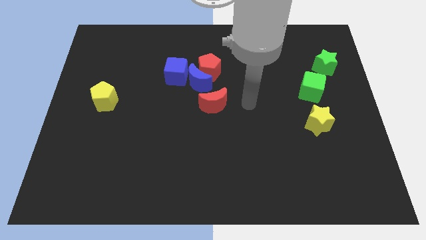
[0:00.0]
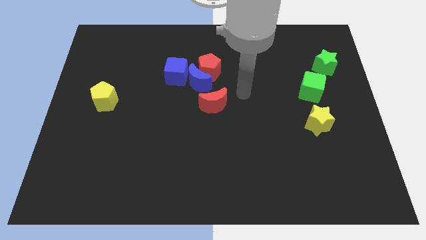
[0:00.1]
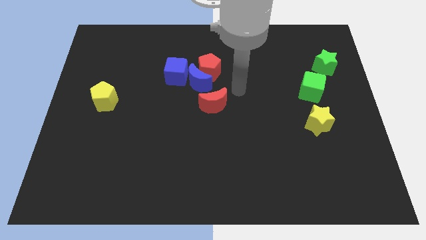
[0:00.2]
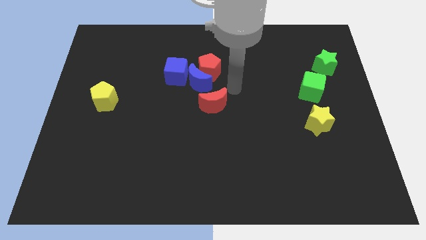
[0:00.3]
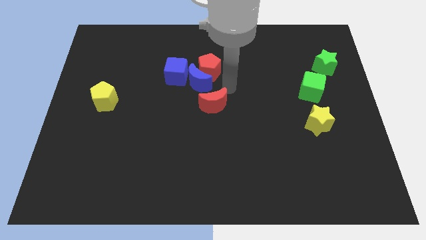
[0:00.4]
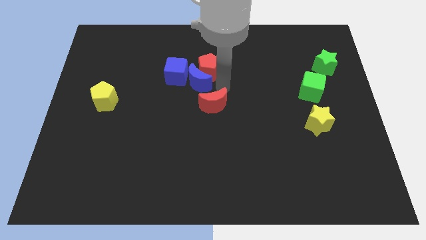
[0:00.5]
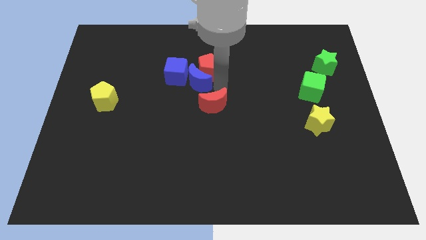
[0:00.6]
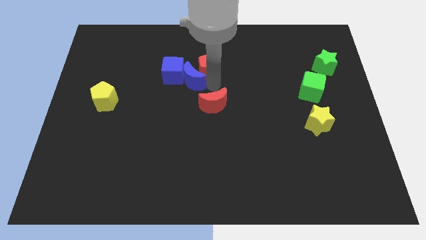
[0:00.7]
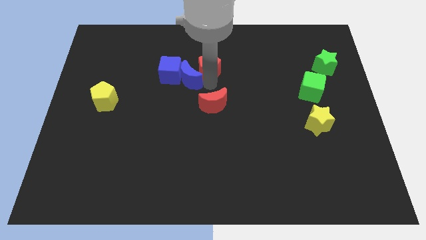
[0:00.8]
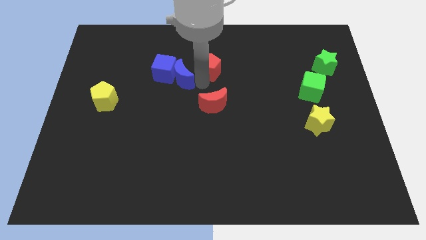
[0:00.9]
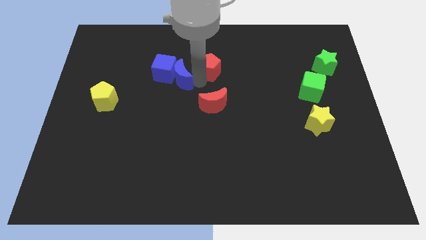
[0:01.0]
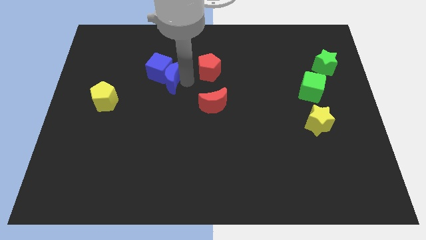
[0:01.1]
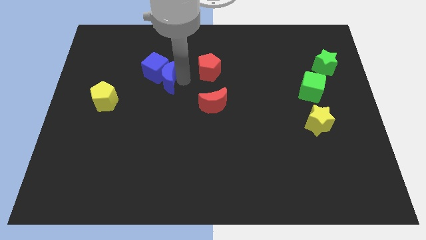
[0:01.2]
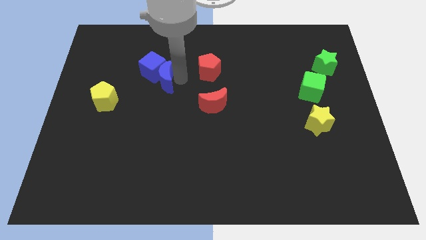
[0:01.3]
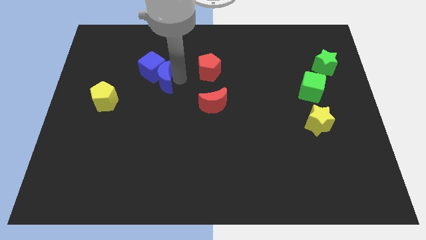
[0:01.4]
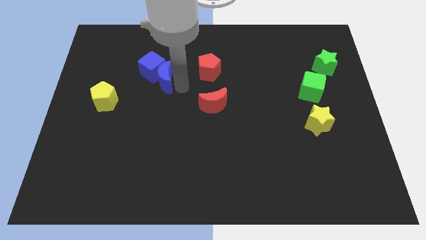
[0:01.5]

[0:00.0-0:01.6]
move the blue blocks to the left side of the red pentagon

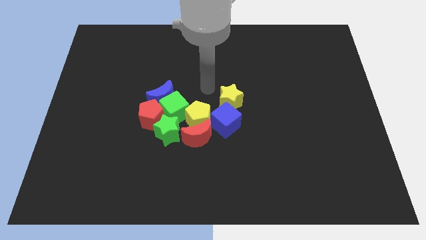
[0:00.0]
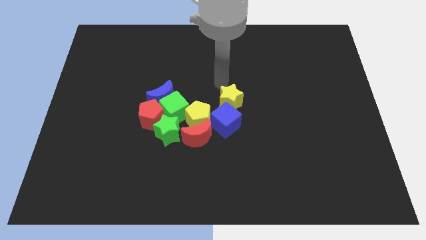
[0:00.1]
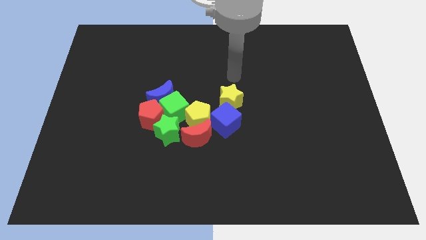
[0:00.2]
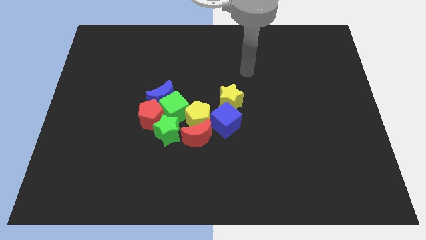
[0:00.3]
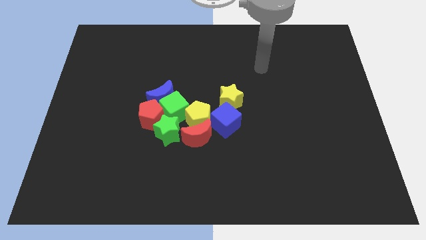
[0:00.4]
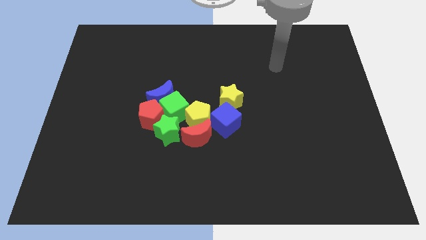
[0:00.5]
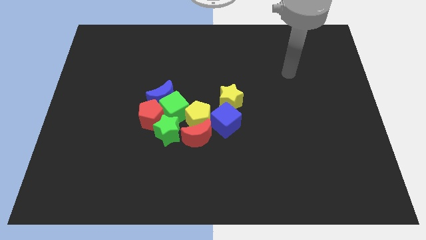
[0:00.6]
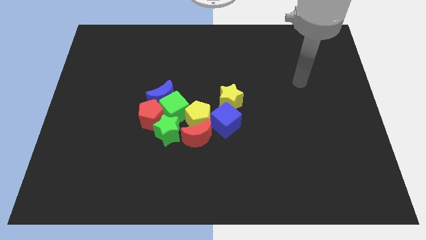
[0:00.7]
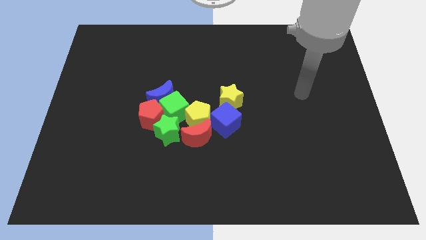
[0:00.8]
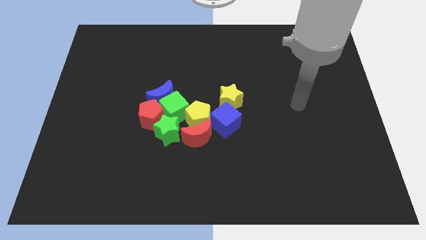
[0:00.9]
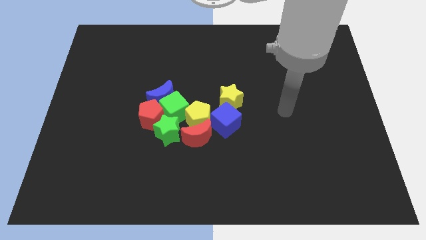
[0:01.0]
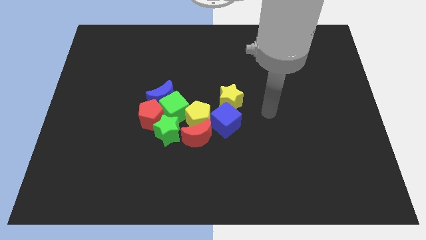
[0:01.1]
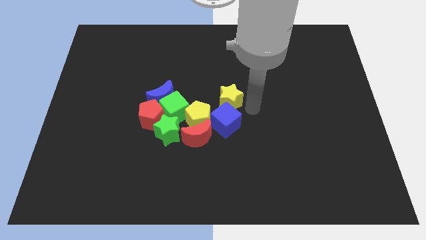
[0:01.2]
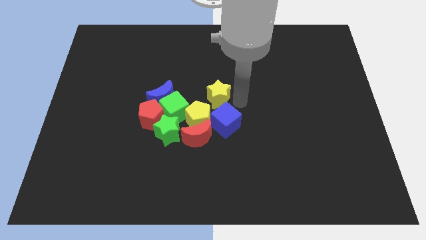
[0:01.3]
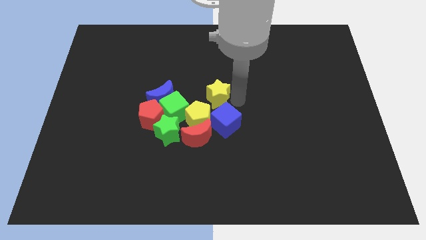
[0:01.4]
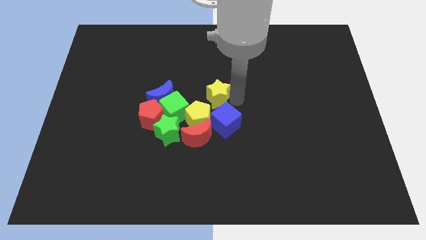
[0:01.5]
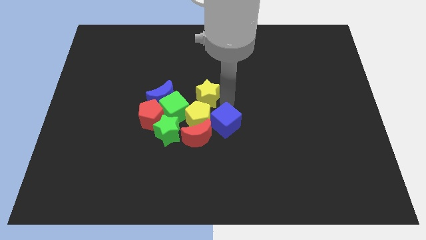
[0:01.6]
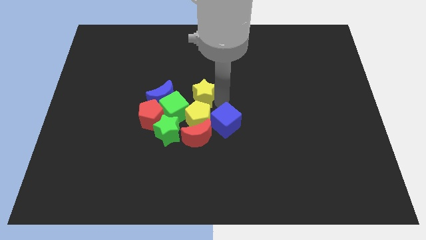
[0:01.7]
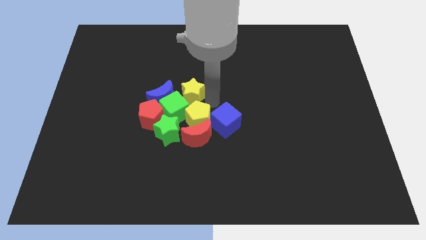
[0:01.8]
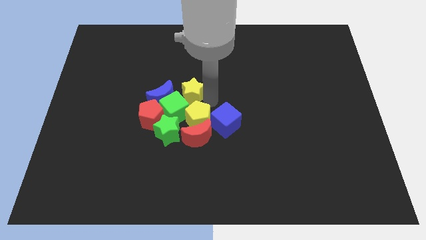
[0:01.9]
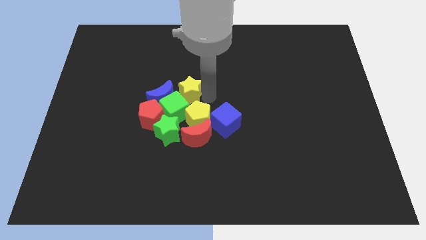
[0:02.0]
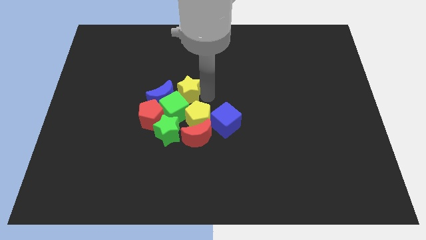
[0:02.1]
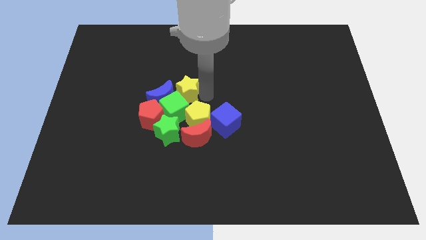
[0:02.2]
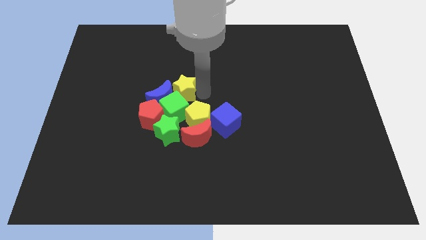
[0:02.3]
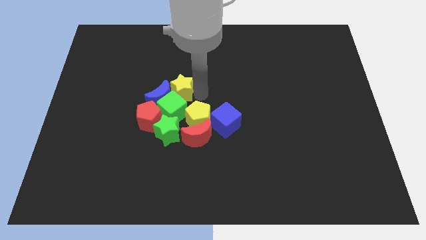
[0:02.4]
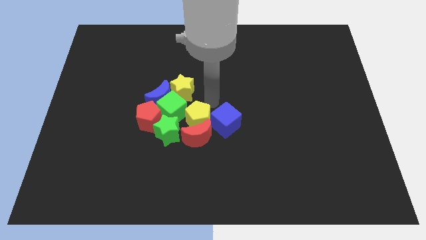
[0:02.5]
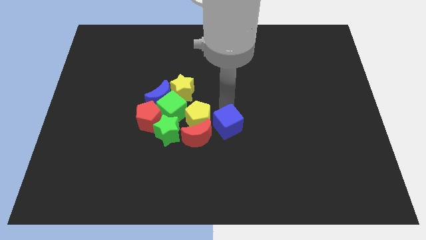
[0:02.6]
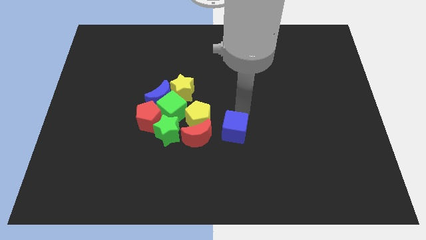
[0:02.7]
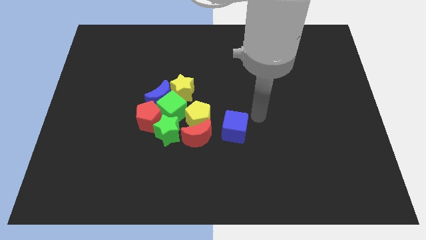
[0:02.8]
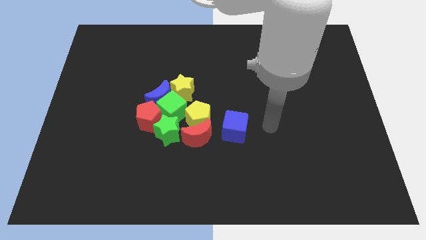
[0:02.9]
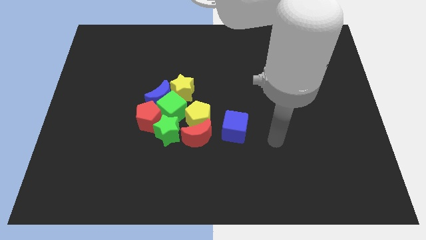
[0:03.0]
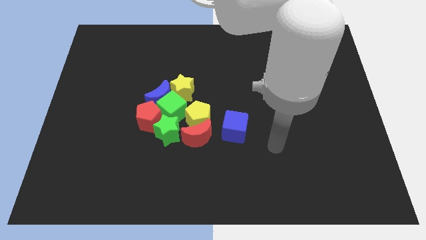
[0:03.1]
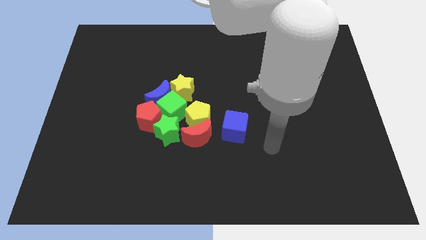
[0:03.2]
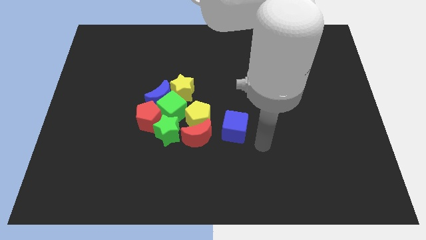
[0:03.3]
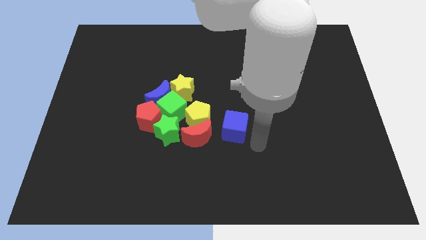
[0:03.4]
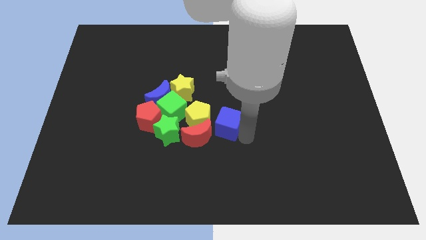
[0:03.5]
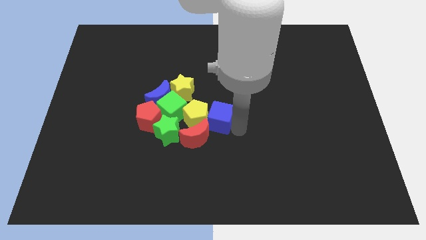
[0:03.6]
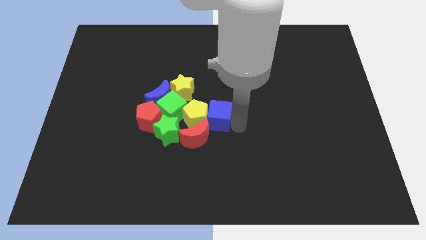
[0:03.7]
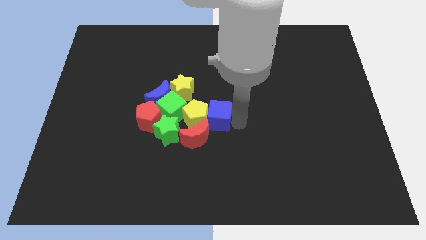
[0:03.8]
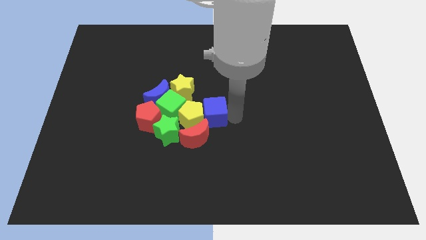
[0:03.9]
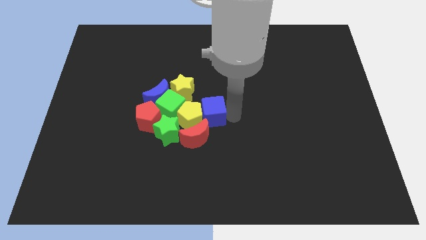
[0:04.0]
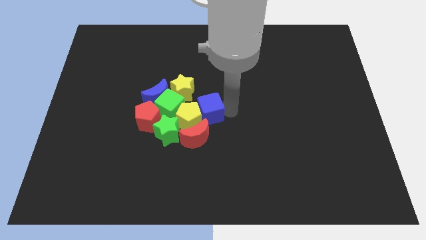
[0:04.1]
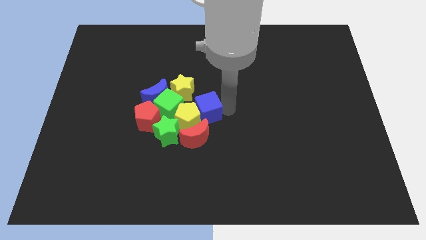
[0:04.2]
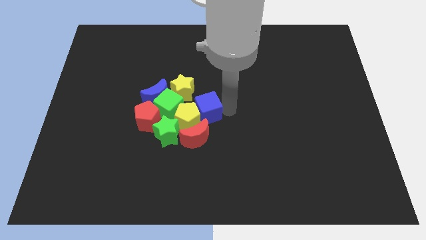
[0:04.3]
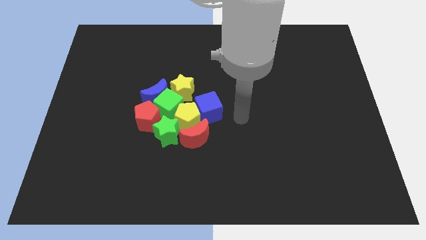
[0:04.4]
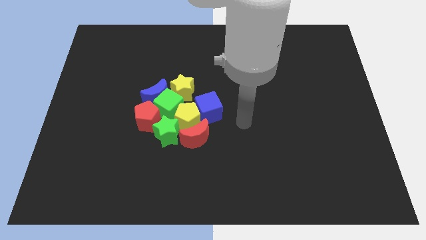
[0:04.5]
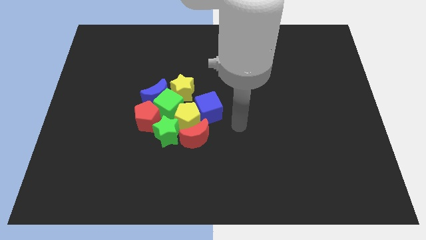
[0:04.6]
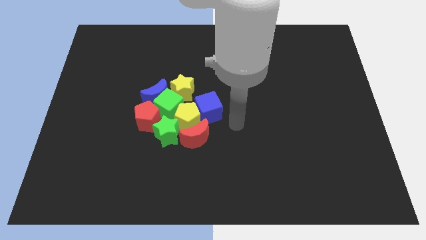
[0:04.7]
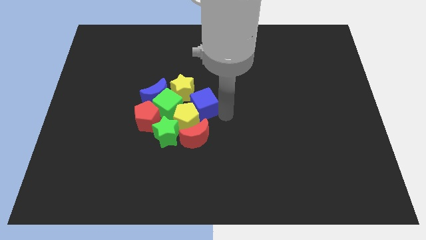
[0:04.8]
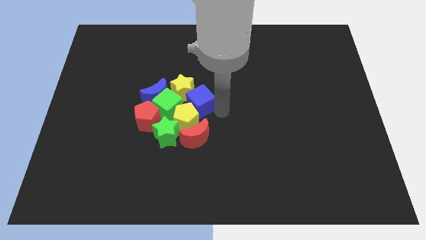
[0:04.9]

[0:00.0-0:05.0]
push the yellow star and blue cube into the group of blocks

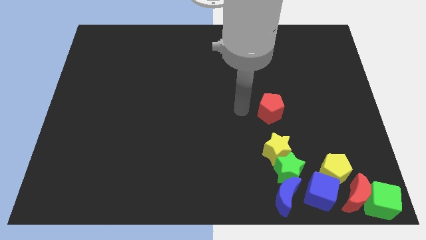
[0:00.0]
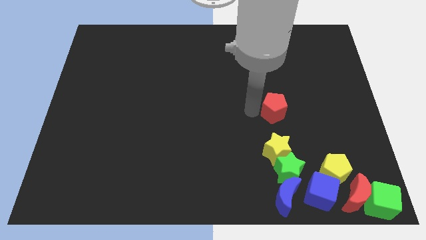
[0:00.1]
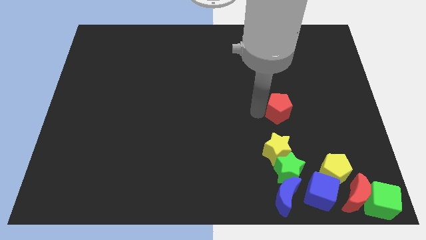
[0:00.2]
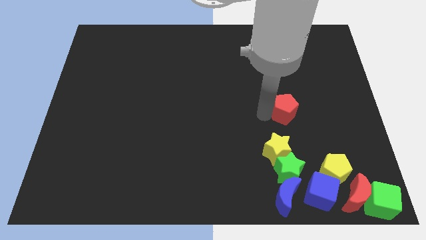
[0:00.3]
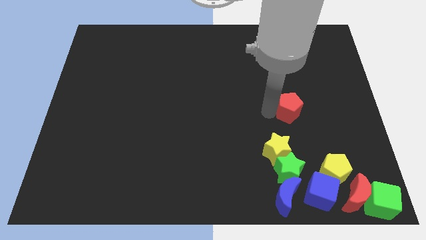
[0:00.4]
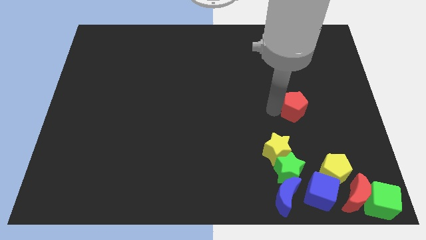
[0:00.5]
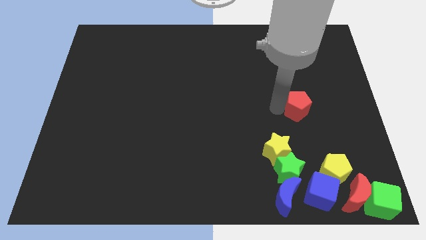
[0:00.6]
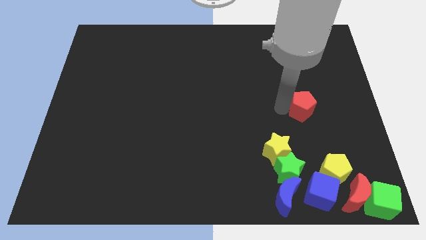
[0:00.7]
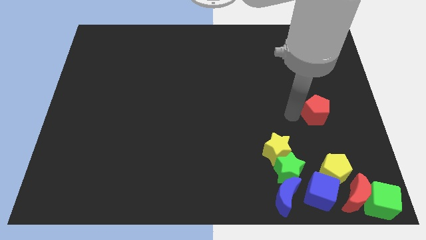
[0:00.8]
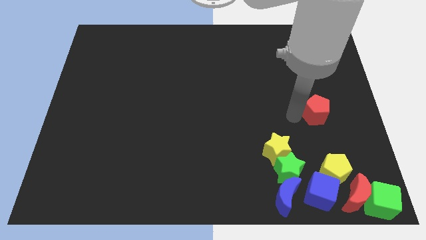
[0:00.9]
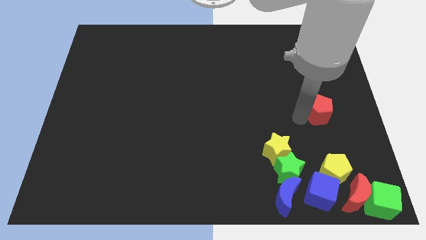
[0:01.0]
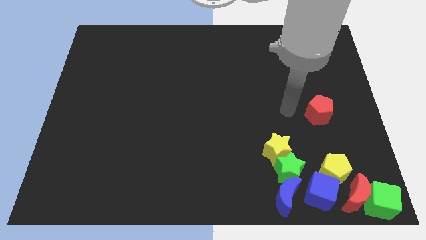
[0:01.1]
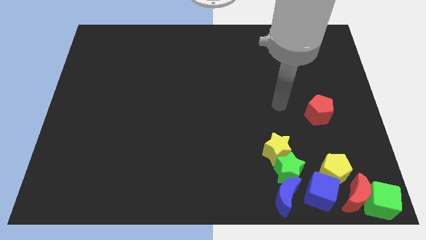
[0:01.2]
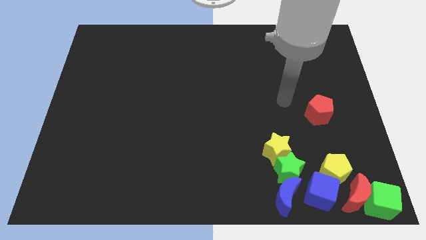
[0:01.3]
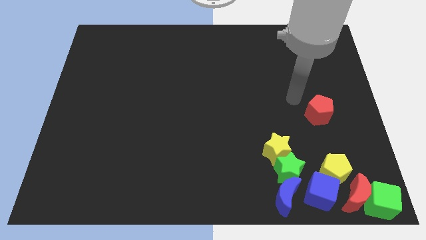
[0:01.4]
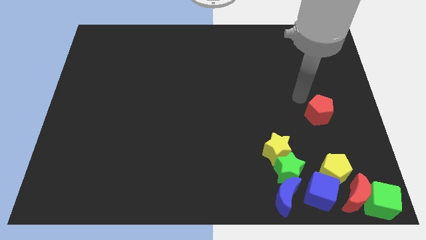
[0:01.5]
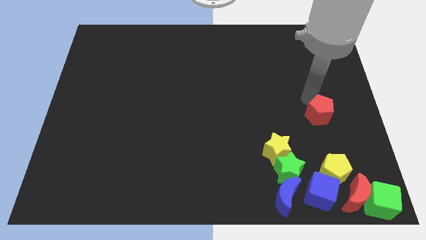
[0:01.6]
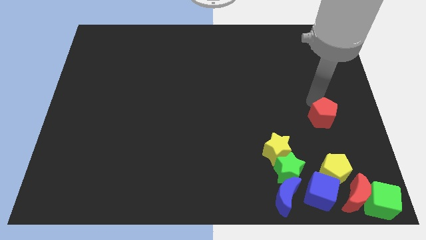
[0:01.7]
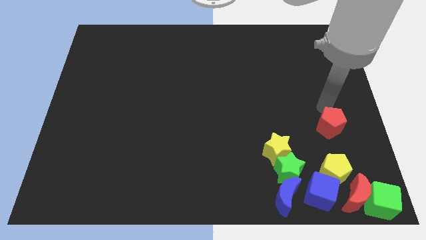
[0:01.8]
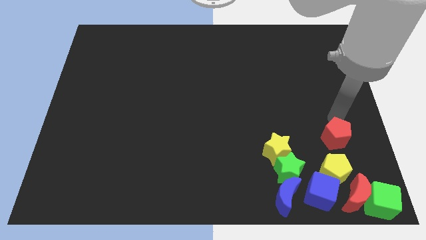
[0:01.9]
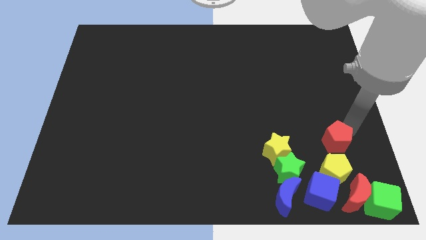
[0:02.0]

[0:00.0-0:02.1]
put the red pentagon above the yellow pentagon

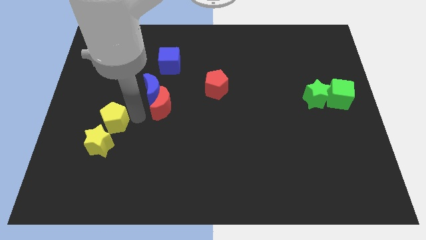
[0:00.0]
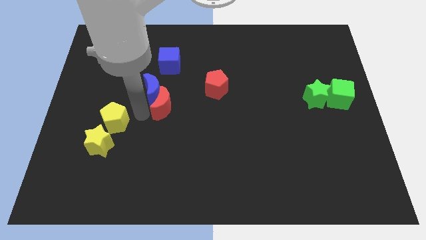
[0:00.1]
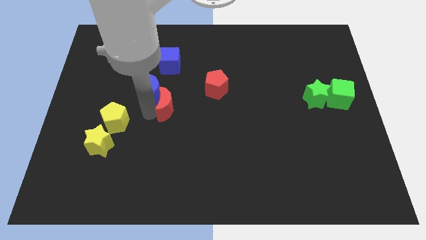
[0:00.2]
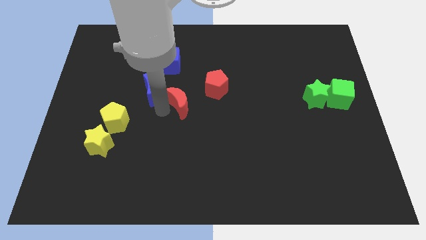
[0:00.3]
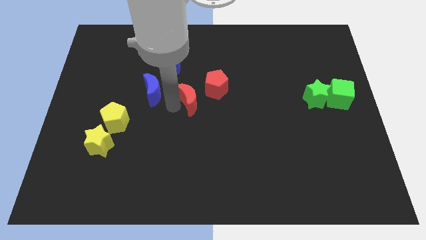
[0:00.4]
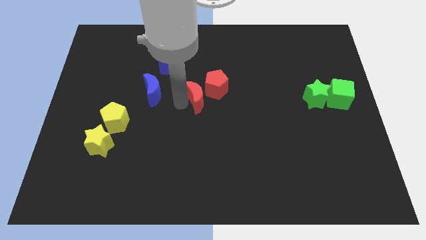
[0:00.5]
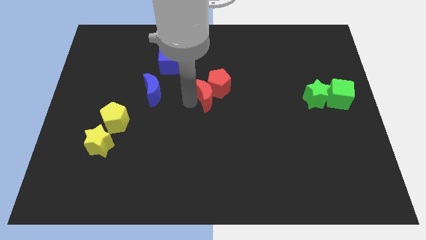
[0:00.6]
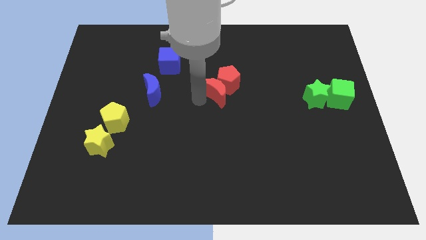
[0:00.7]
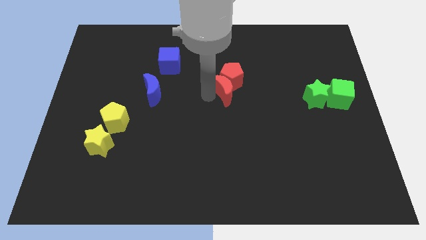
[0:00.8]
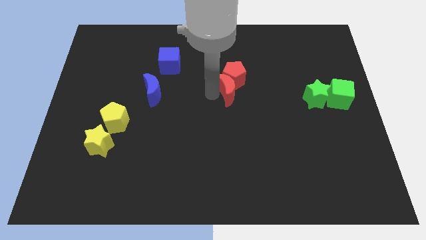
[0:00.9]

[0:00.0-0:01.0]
push the red crescent below the red pentagon
